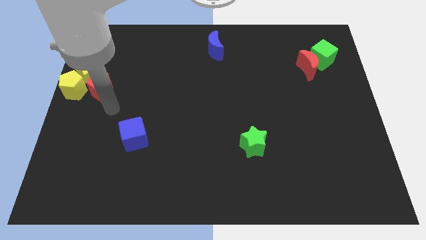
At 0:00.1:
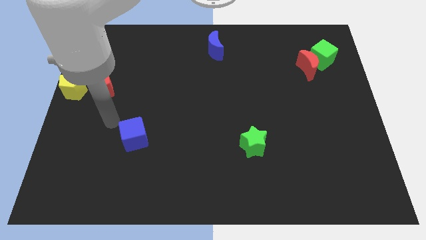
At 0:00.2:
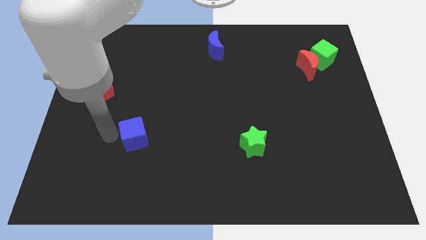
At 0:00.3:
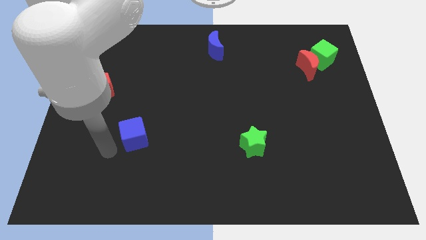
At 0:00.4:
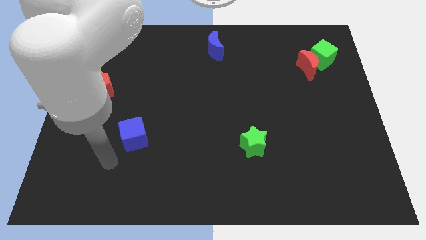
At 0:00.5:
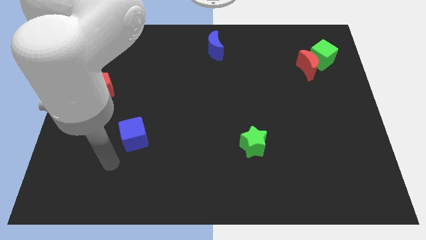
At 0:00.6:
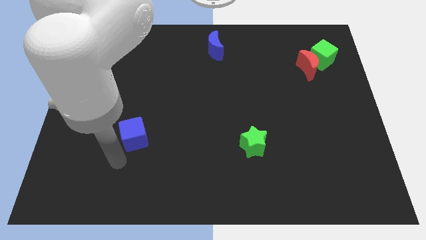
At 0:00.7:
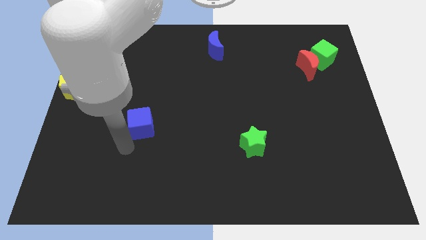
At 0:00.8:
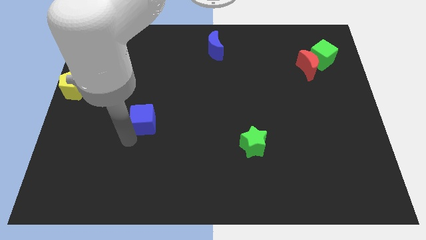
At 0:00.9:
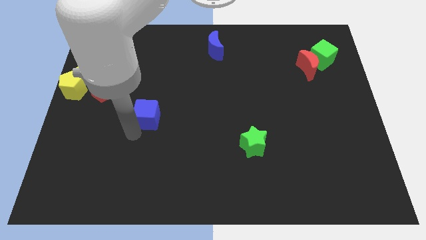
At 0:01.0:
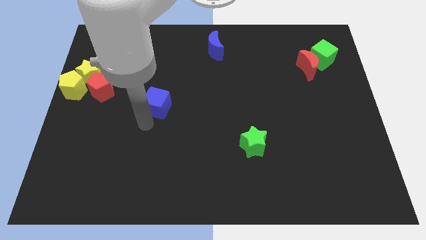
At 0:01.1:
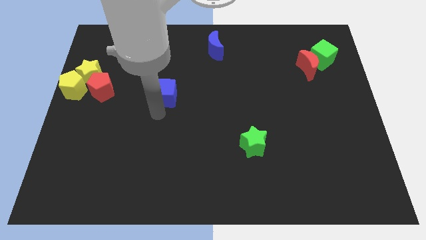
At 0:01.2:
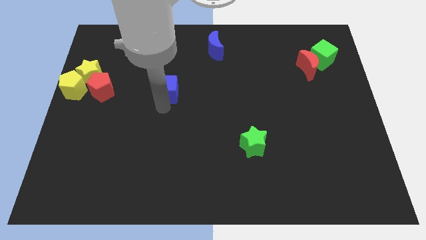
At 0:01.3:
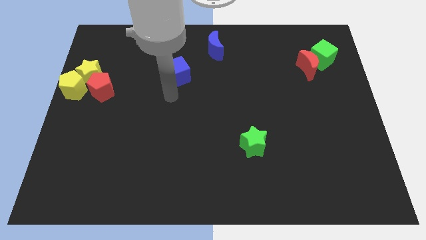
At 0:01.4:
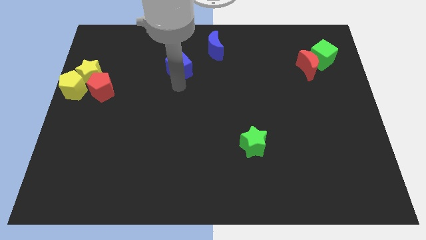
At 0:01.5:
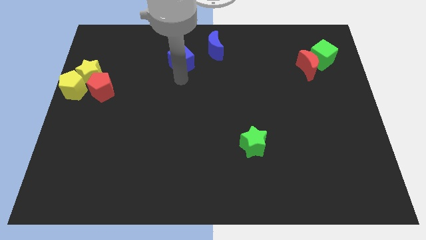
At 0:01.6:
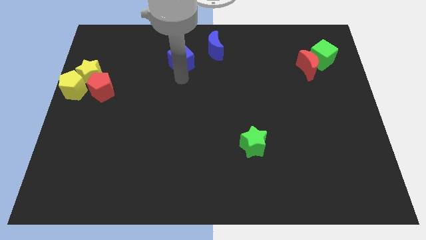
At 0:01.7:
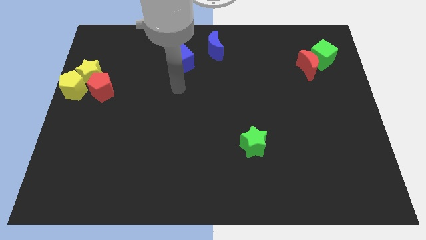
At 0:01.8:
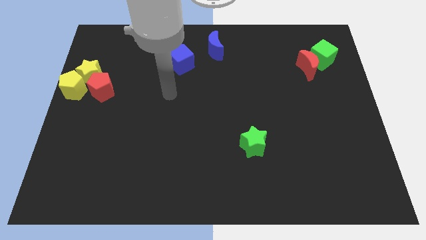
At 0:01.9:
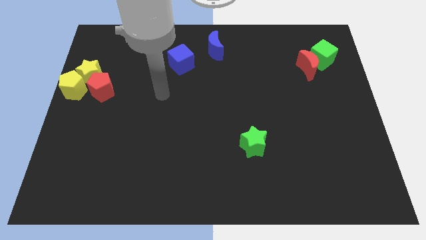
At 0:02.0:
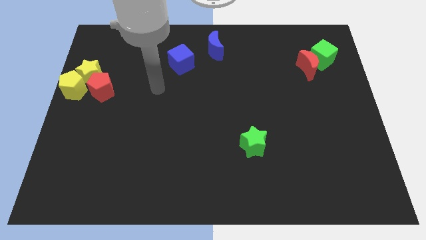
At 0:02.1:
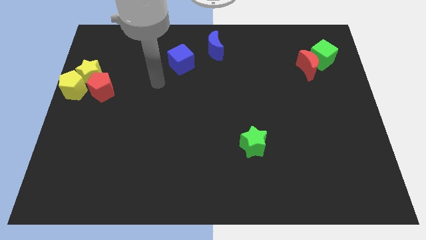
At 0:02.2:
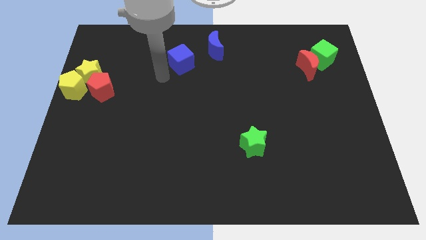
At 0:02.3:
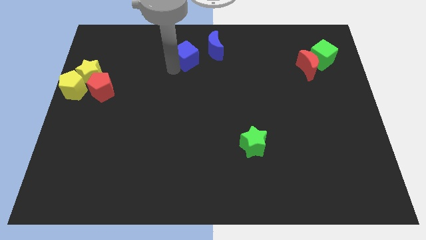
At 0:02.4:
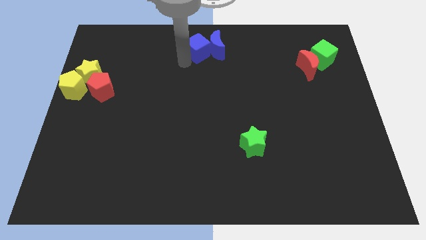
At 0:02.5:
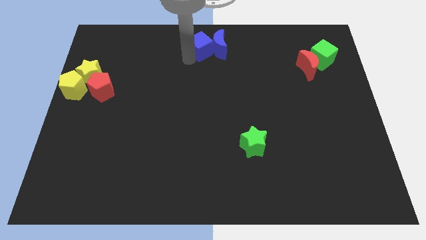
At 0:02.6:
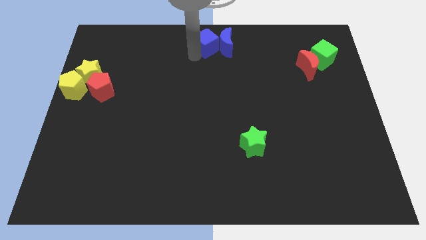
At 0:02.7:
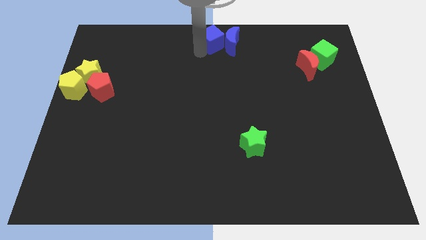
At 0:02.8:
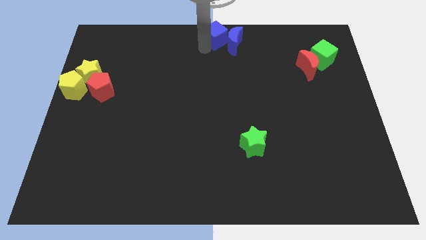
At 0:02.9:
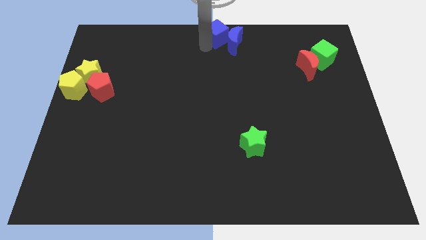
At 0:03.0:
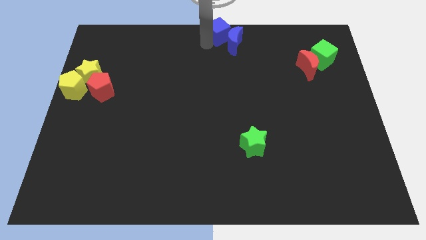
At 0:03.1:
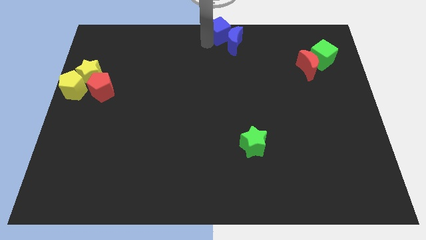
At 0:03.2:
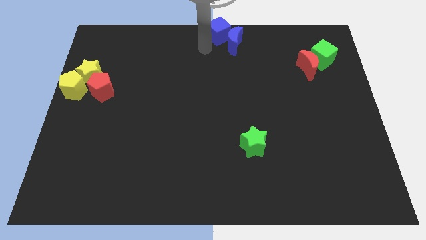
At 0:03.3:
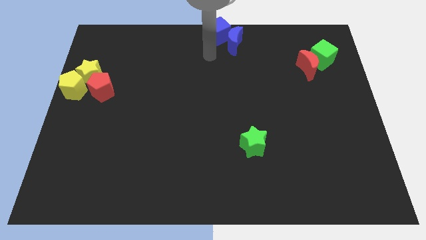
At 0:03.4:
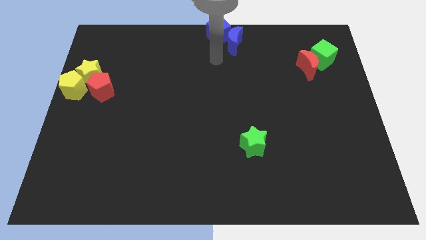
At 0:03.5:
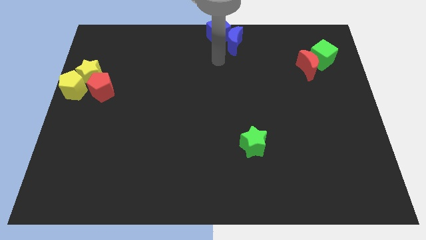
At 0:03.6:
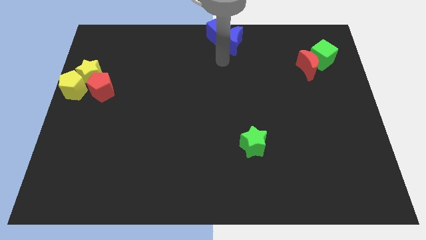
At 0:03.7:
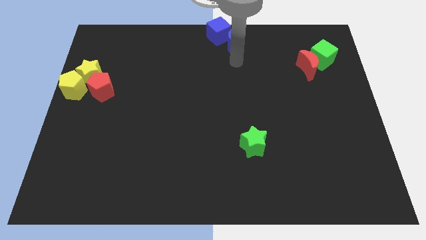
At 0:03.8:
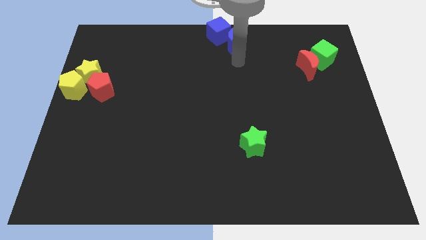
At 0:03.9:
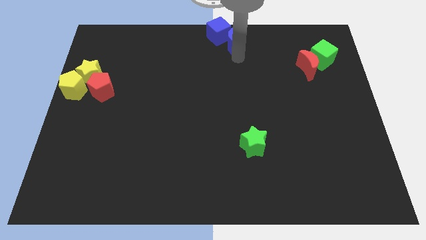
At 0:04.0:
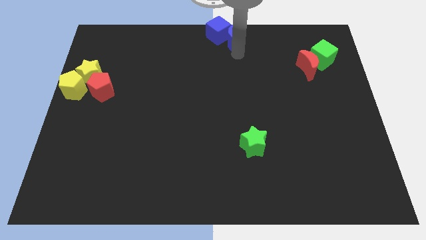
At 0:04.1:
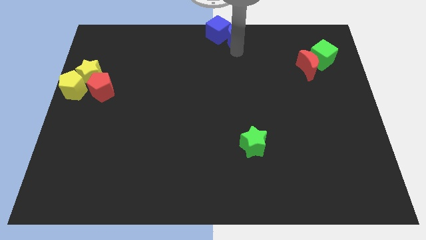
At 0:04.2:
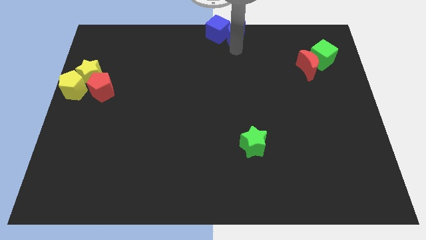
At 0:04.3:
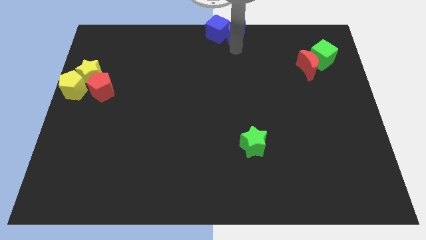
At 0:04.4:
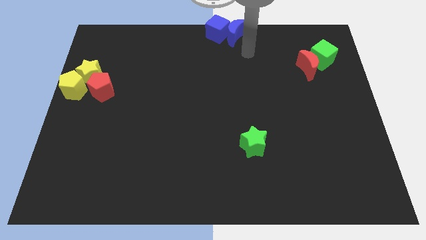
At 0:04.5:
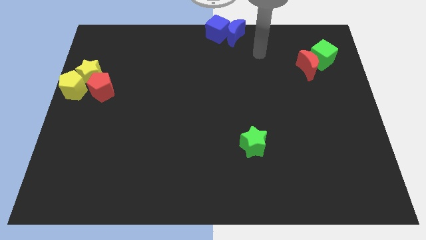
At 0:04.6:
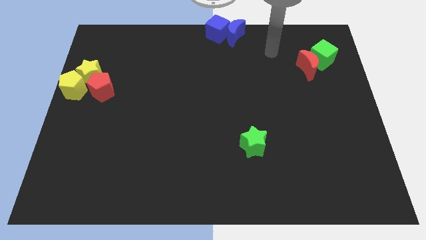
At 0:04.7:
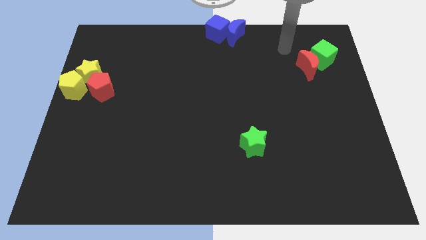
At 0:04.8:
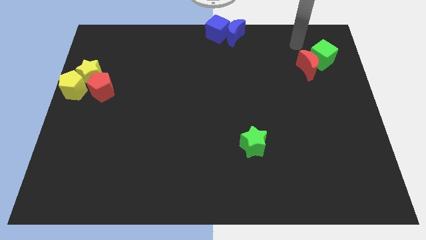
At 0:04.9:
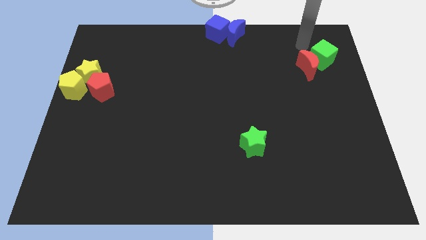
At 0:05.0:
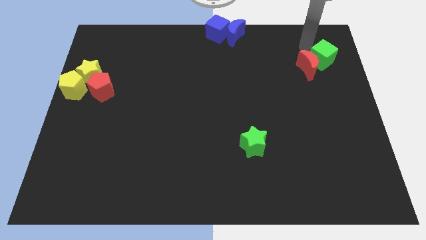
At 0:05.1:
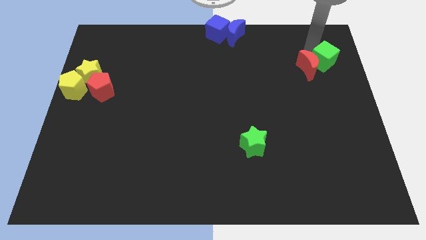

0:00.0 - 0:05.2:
place the blue blocks to the top center of the board

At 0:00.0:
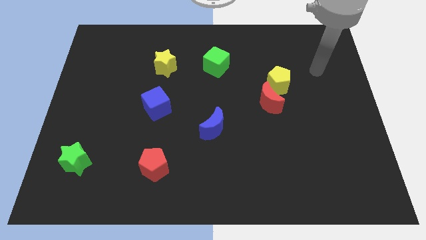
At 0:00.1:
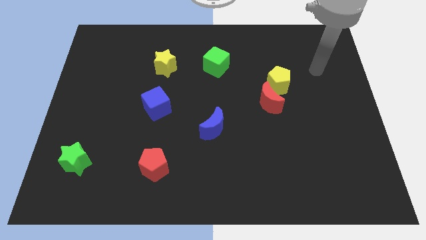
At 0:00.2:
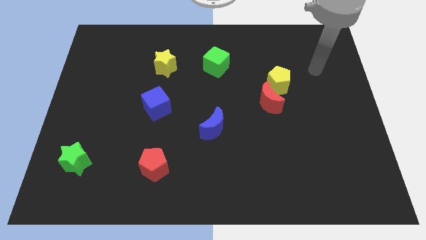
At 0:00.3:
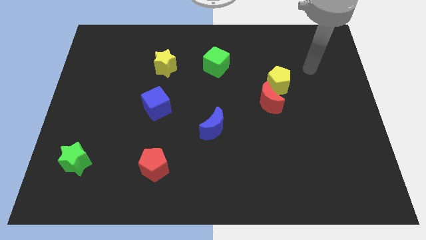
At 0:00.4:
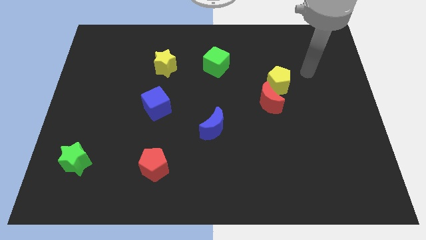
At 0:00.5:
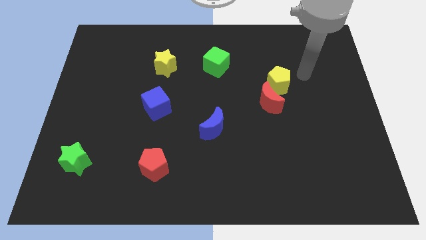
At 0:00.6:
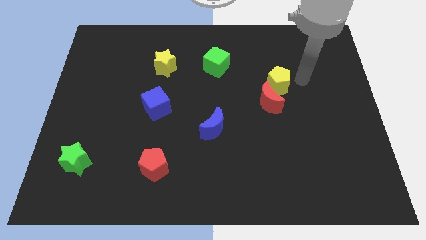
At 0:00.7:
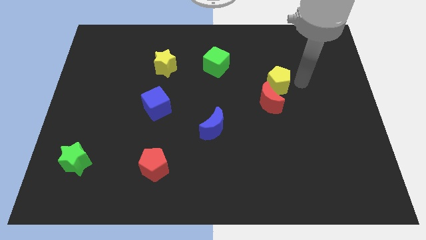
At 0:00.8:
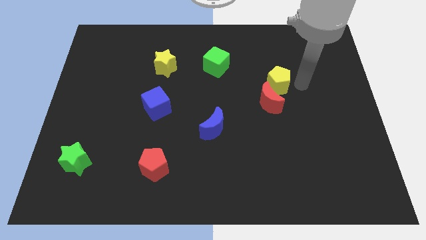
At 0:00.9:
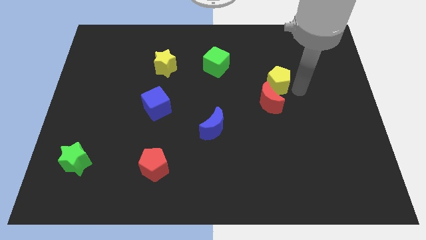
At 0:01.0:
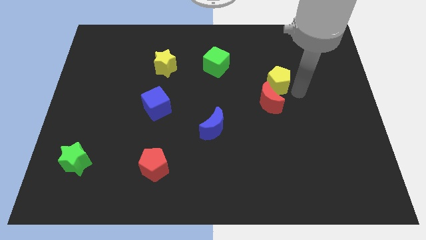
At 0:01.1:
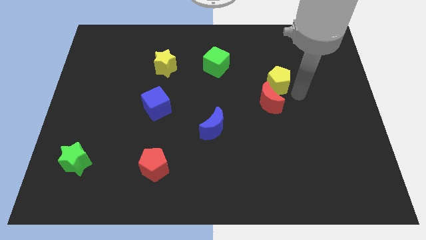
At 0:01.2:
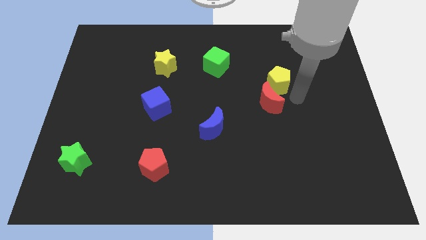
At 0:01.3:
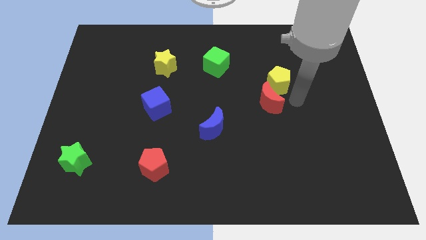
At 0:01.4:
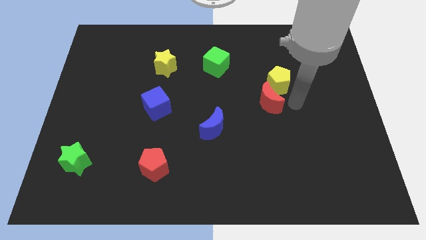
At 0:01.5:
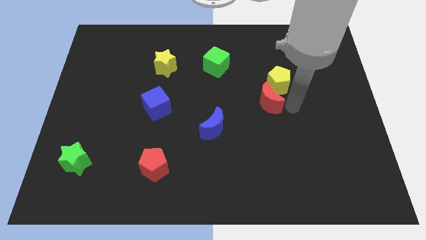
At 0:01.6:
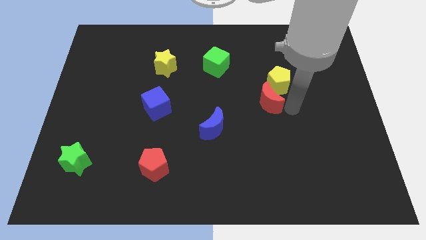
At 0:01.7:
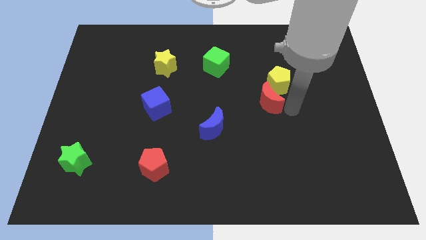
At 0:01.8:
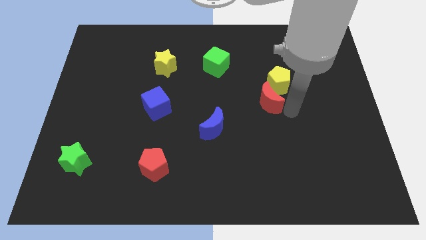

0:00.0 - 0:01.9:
point your hand at the right side of the red moon

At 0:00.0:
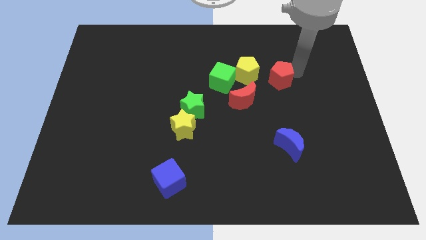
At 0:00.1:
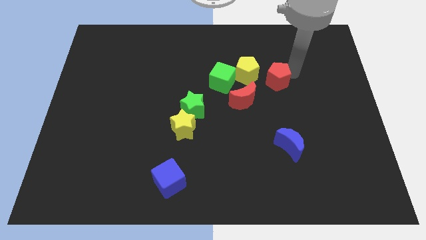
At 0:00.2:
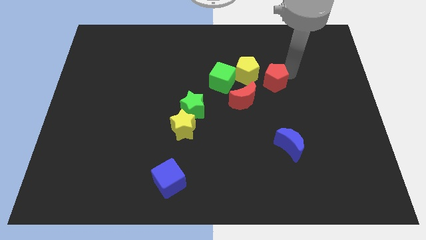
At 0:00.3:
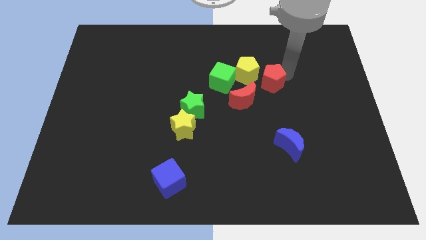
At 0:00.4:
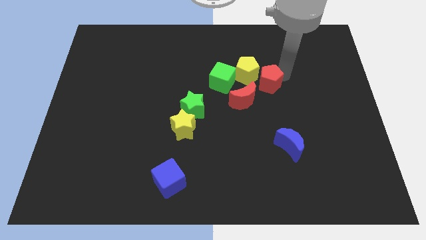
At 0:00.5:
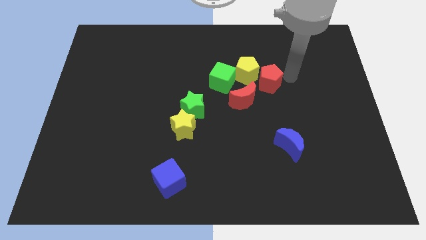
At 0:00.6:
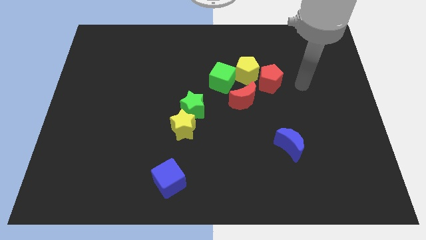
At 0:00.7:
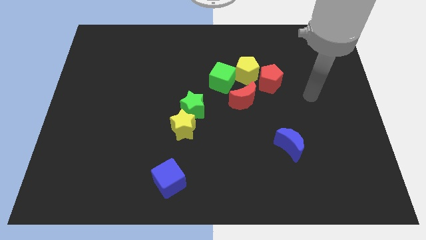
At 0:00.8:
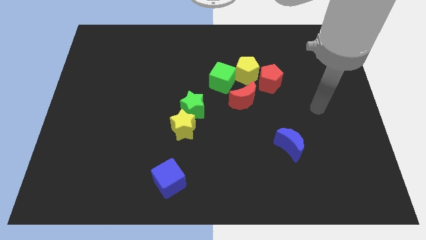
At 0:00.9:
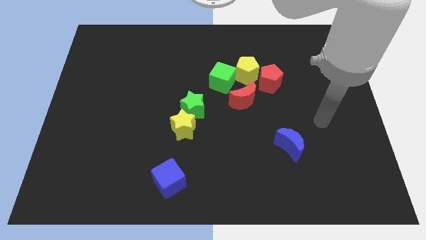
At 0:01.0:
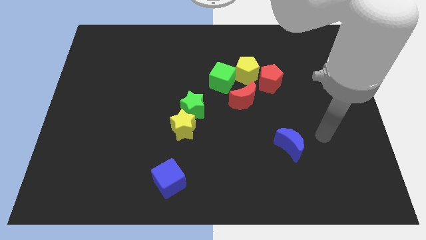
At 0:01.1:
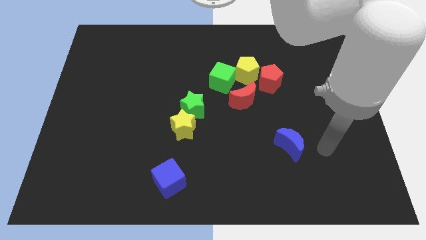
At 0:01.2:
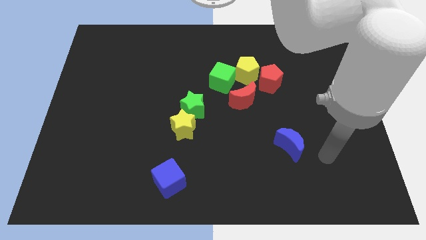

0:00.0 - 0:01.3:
push the red pentagon close to the yellow pentagon

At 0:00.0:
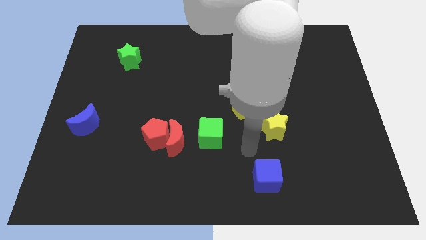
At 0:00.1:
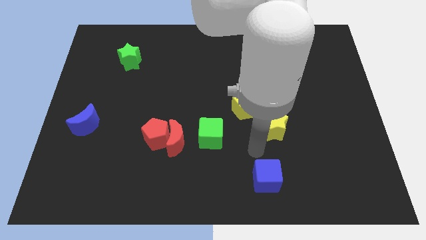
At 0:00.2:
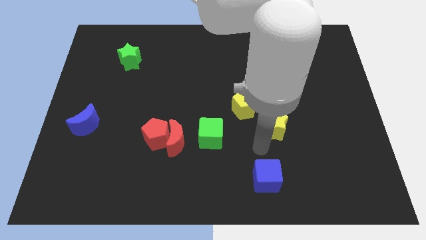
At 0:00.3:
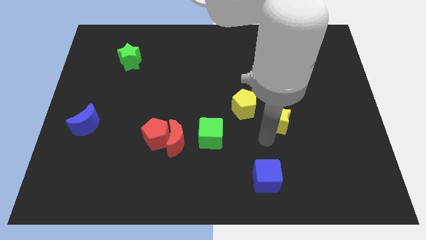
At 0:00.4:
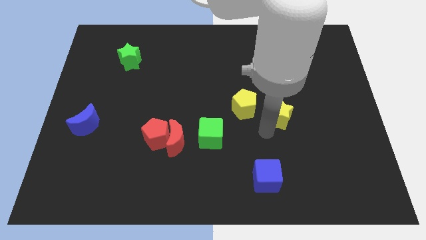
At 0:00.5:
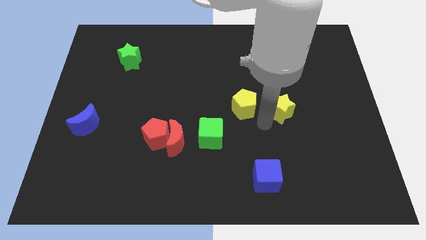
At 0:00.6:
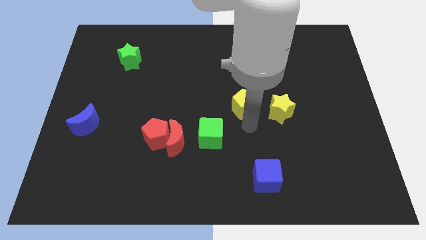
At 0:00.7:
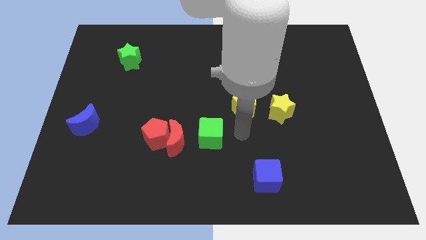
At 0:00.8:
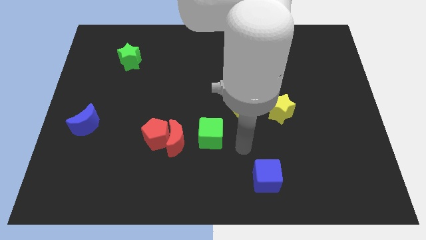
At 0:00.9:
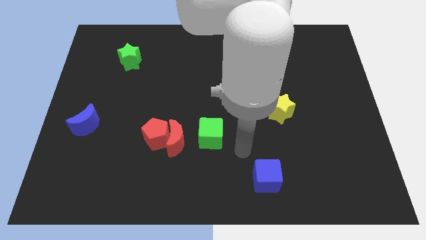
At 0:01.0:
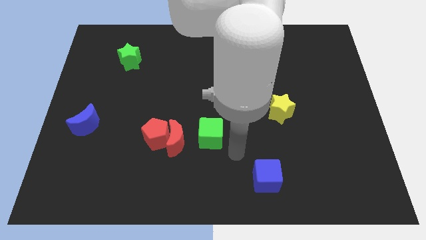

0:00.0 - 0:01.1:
push the yellow star to the right side of the yellow pentagon
